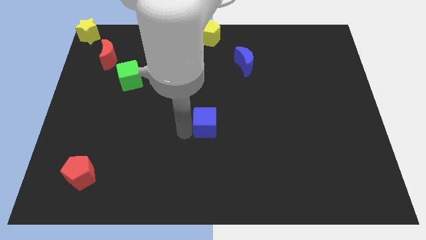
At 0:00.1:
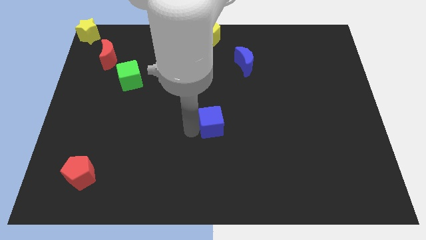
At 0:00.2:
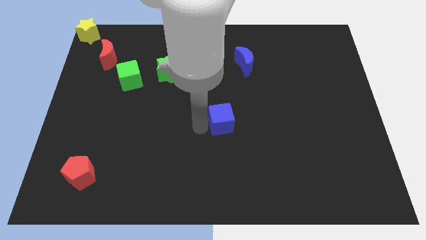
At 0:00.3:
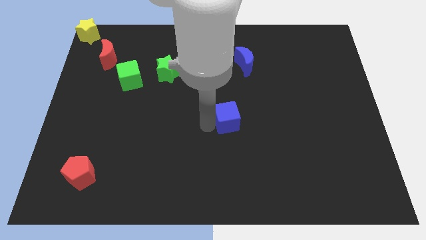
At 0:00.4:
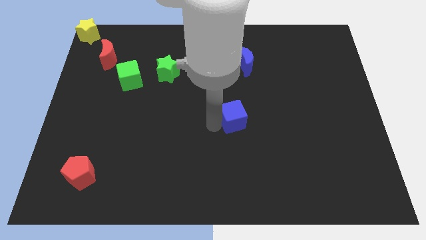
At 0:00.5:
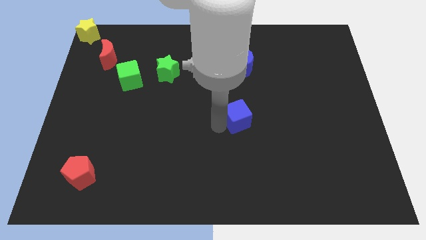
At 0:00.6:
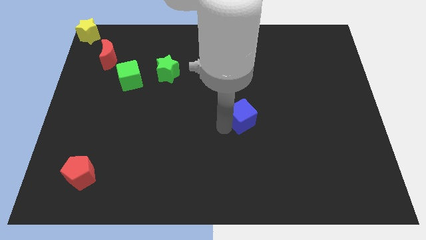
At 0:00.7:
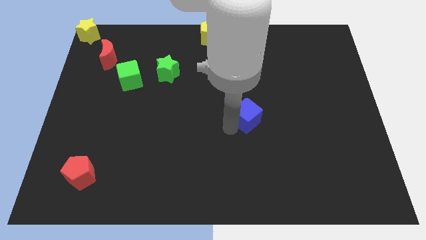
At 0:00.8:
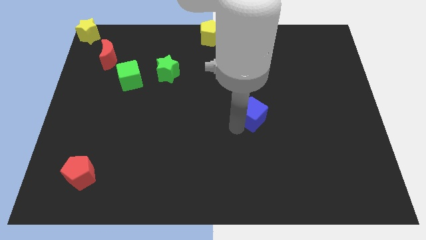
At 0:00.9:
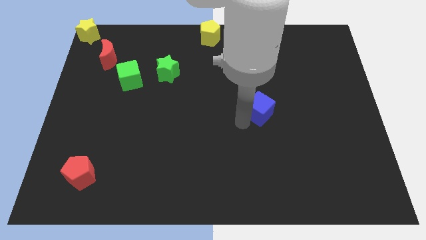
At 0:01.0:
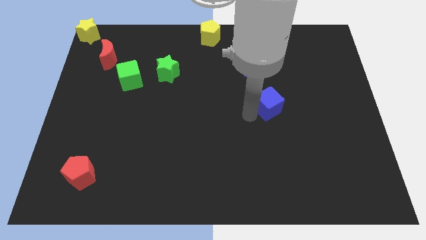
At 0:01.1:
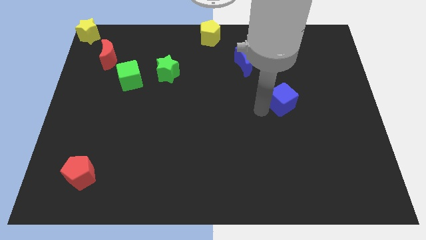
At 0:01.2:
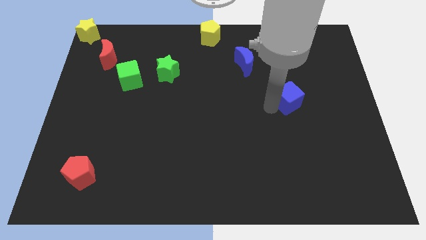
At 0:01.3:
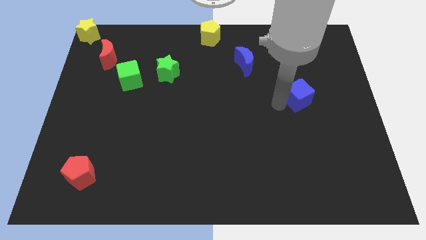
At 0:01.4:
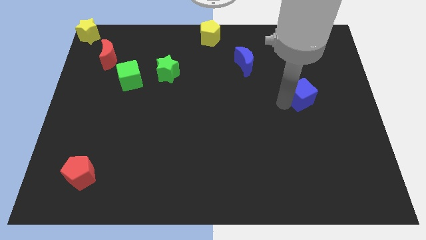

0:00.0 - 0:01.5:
push the blue cube towards the right side

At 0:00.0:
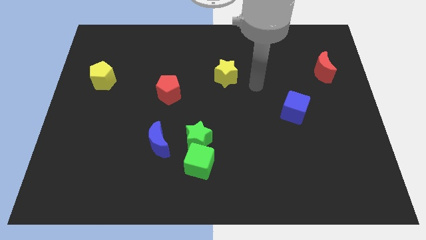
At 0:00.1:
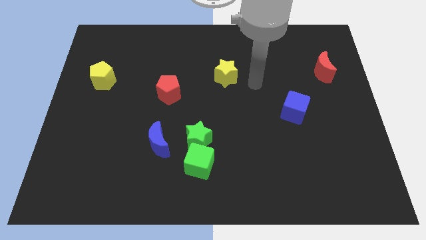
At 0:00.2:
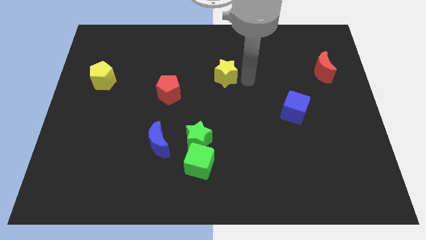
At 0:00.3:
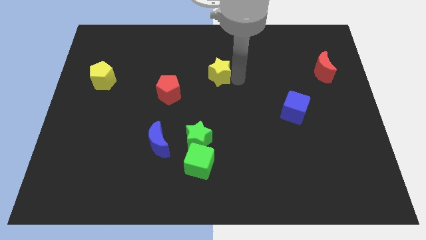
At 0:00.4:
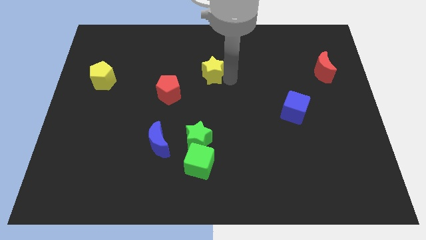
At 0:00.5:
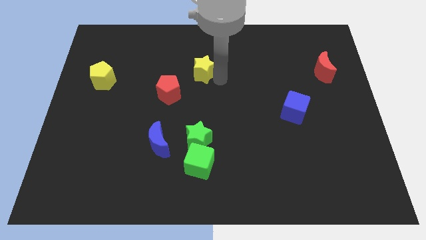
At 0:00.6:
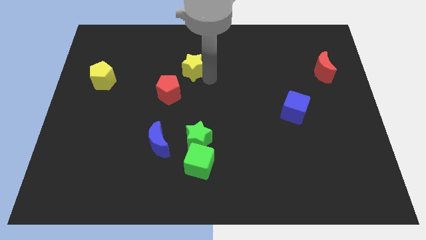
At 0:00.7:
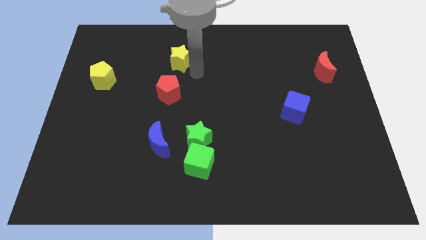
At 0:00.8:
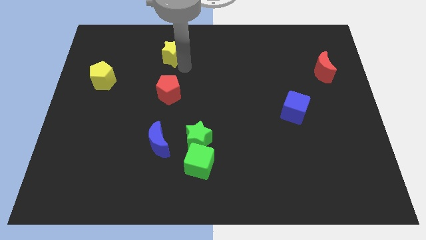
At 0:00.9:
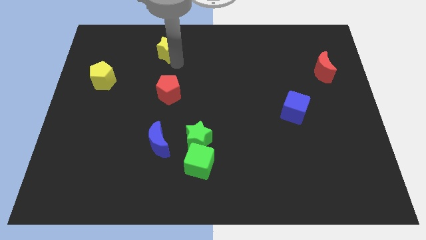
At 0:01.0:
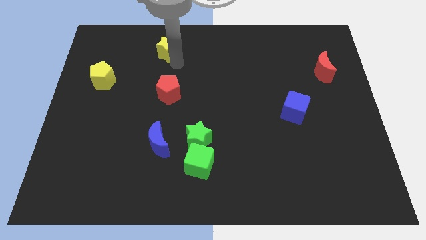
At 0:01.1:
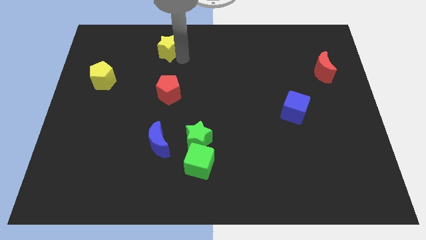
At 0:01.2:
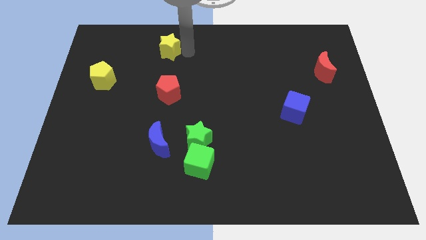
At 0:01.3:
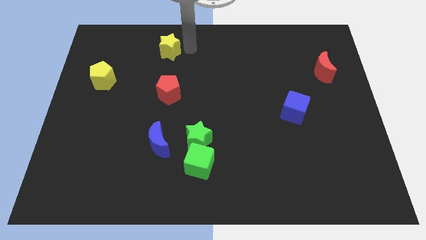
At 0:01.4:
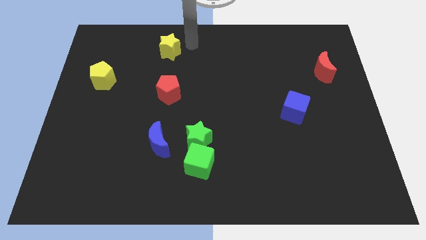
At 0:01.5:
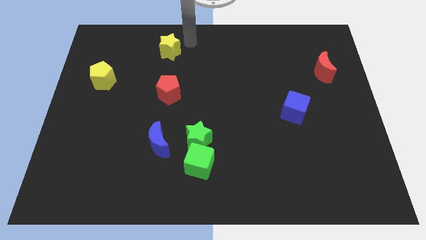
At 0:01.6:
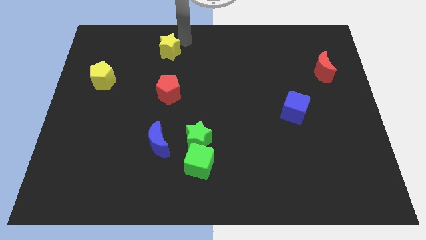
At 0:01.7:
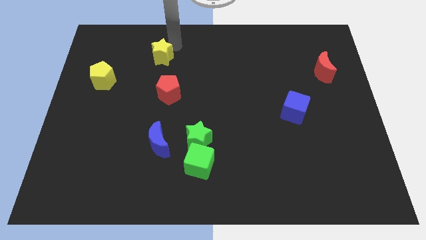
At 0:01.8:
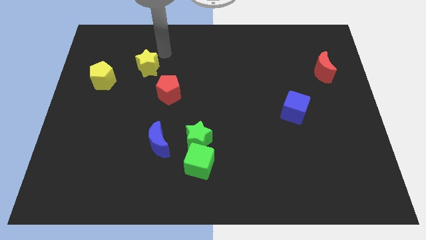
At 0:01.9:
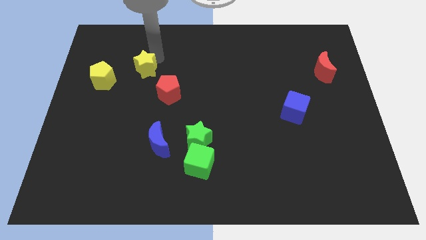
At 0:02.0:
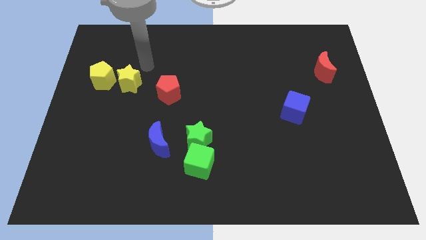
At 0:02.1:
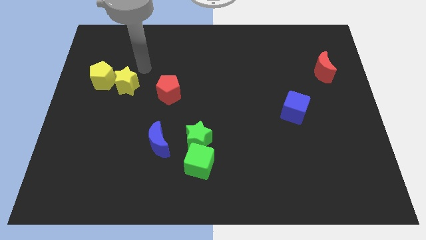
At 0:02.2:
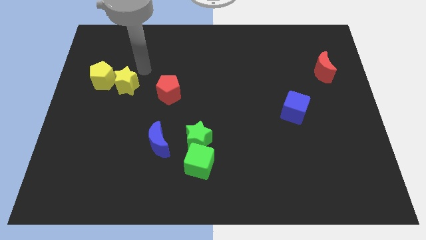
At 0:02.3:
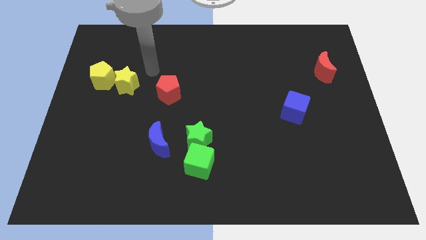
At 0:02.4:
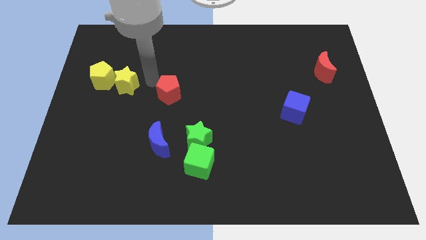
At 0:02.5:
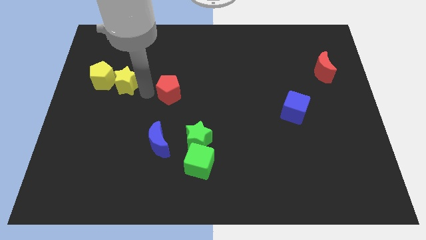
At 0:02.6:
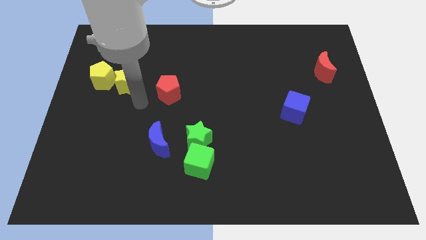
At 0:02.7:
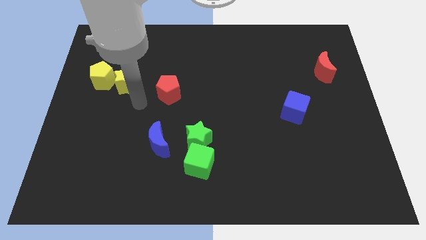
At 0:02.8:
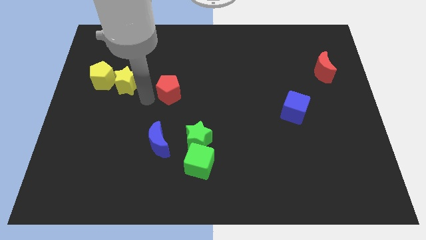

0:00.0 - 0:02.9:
move the yellow star close to the yellow pentagon

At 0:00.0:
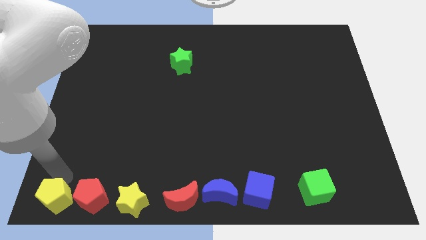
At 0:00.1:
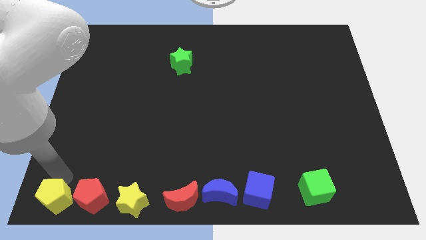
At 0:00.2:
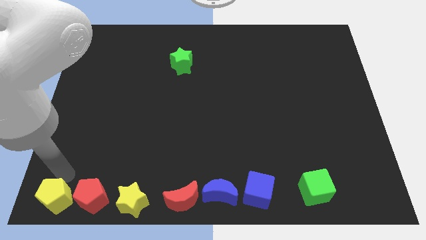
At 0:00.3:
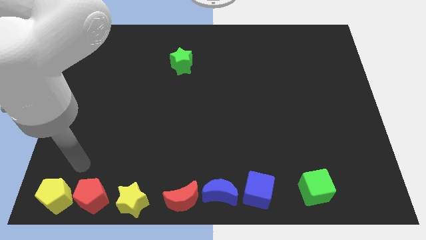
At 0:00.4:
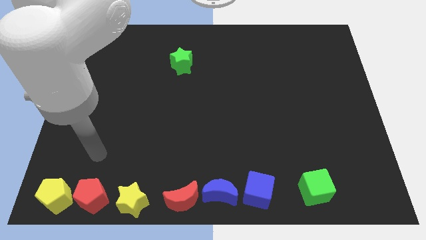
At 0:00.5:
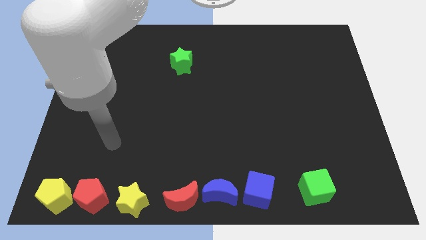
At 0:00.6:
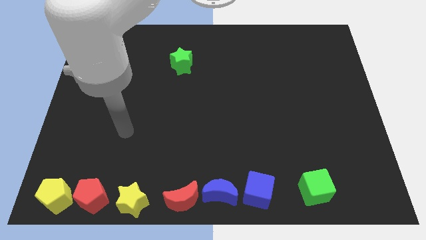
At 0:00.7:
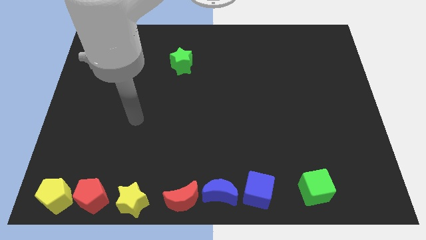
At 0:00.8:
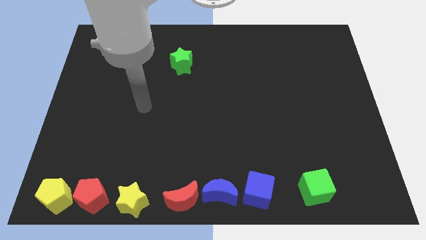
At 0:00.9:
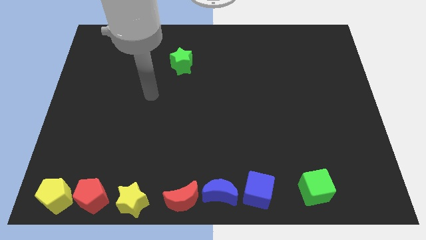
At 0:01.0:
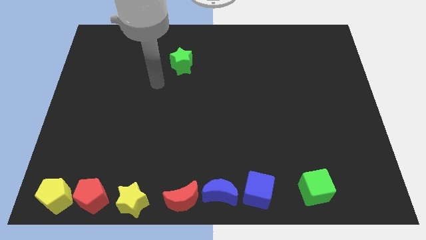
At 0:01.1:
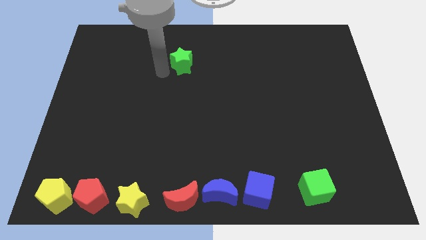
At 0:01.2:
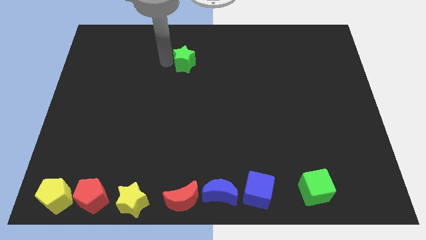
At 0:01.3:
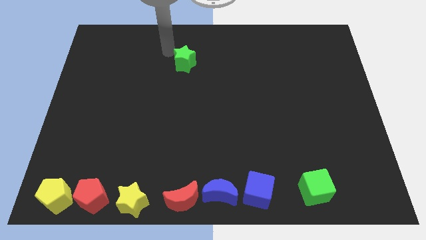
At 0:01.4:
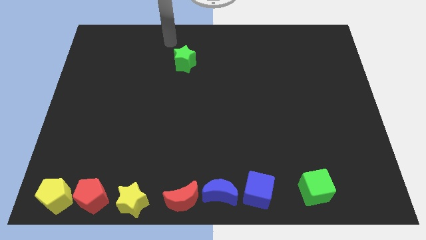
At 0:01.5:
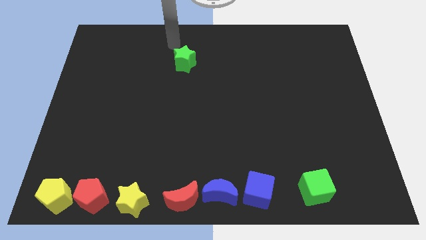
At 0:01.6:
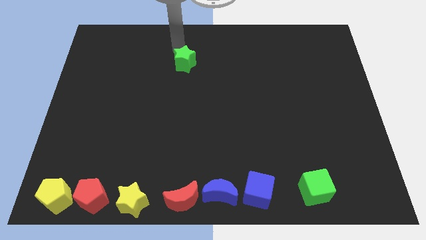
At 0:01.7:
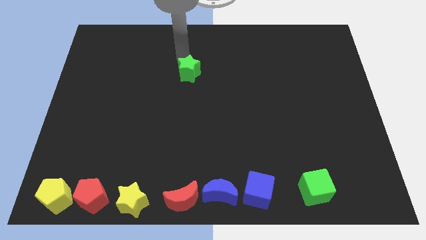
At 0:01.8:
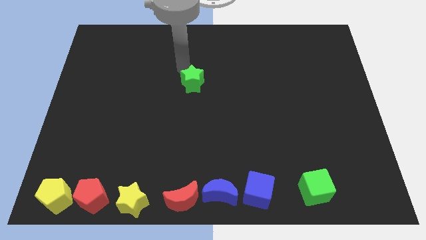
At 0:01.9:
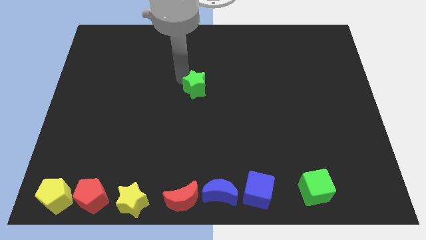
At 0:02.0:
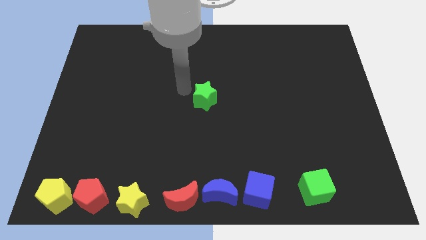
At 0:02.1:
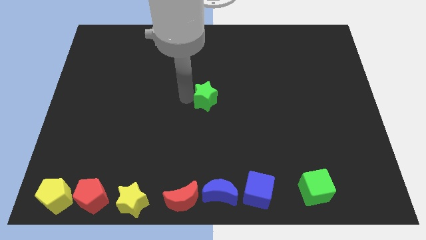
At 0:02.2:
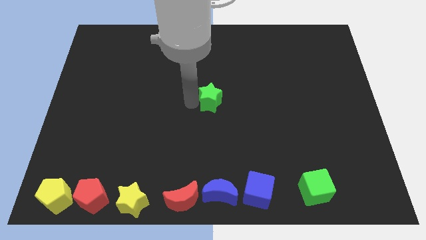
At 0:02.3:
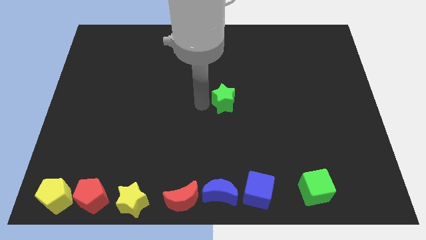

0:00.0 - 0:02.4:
place the green star at the center of the board

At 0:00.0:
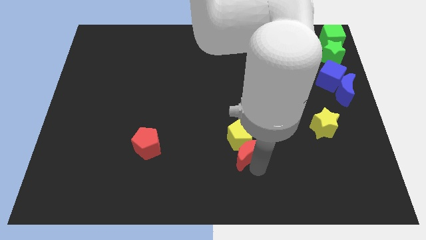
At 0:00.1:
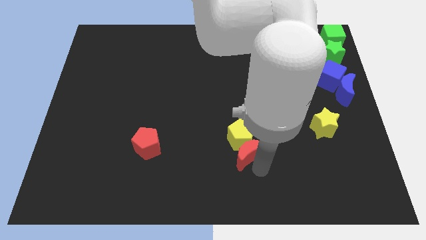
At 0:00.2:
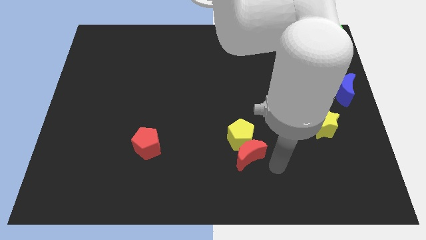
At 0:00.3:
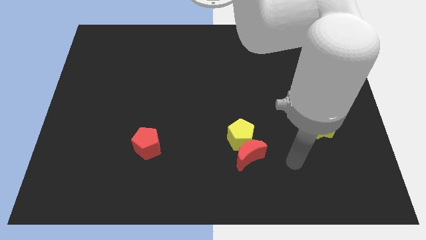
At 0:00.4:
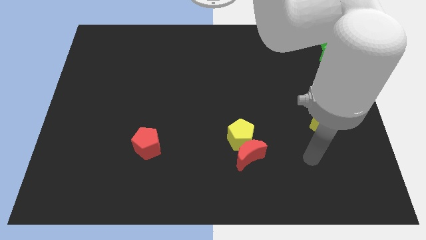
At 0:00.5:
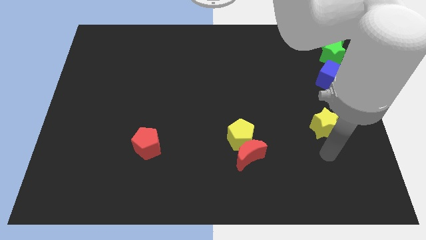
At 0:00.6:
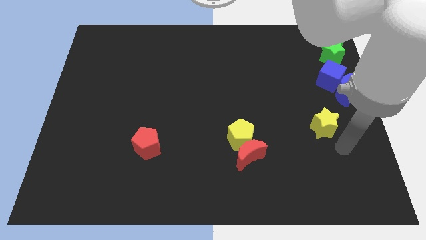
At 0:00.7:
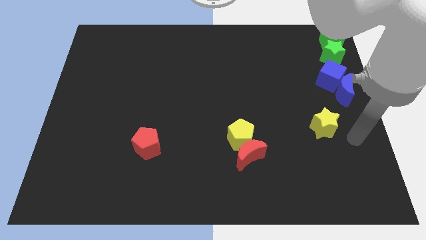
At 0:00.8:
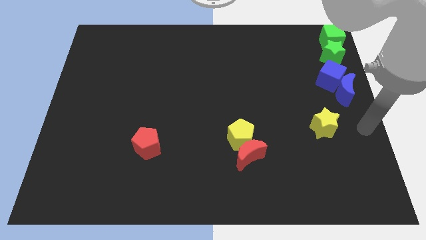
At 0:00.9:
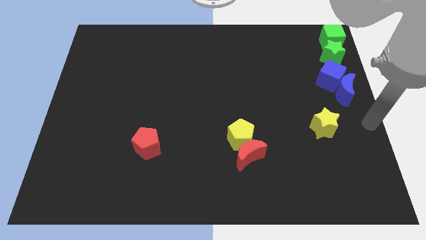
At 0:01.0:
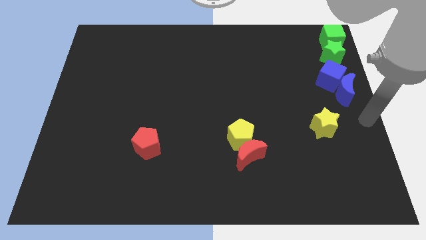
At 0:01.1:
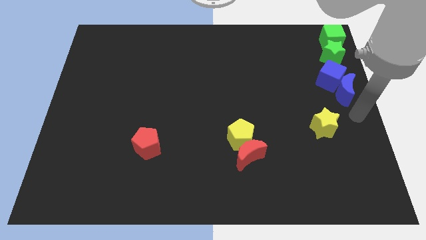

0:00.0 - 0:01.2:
move your arm to the right side of yellow star

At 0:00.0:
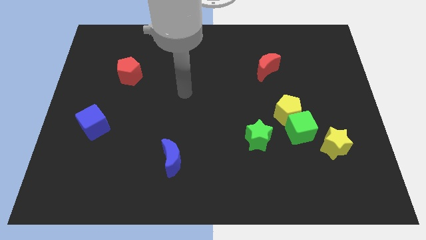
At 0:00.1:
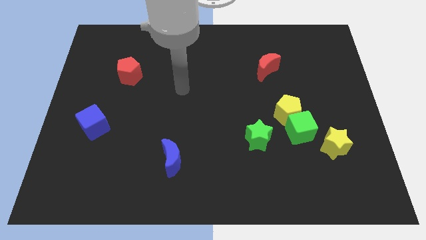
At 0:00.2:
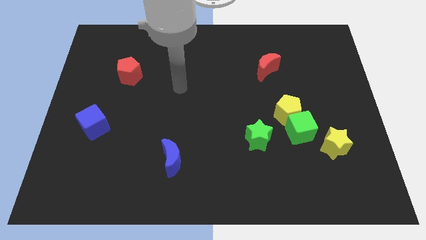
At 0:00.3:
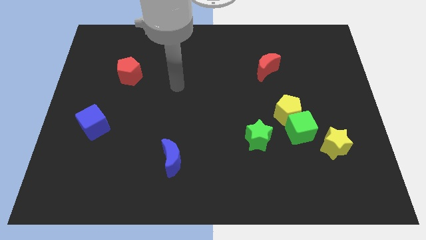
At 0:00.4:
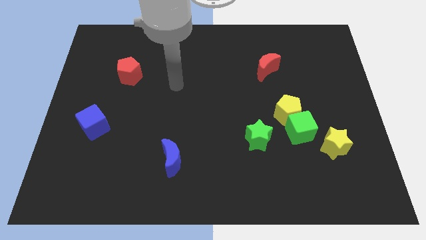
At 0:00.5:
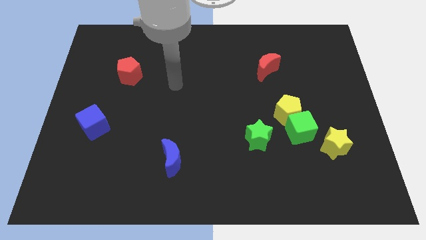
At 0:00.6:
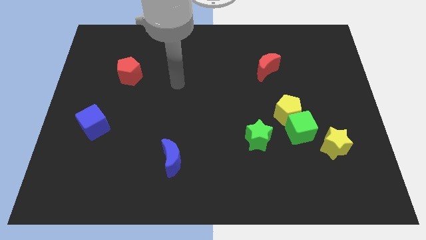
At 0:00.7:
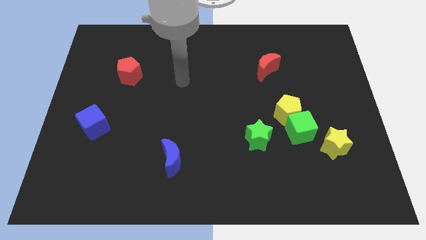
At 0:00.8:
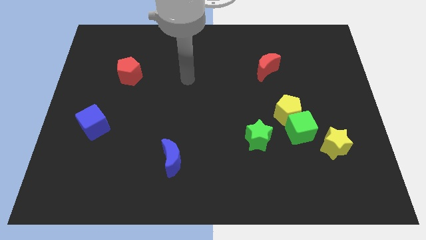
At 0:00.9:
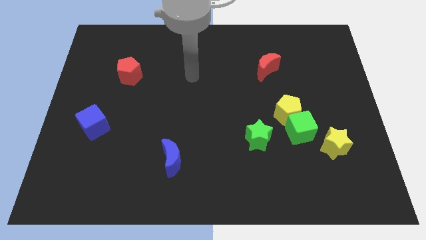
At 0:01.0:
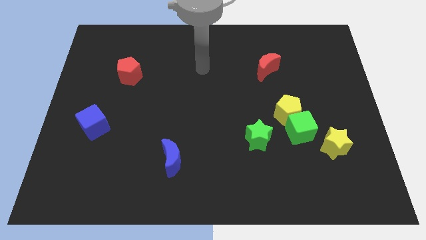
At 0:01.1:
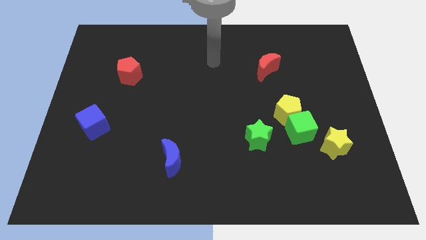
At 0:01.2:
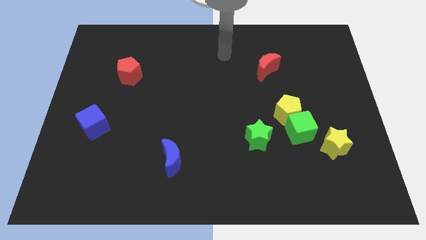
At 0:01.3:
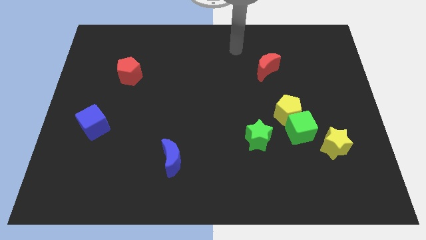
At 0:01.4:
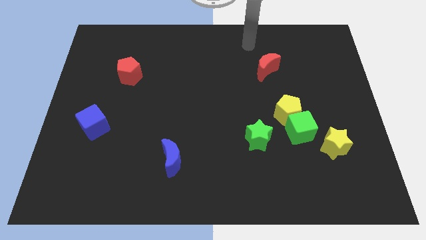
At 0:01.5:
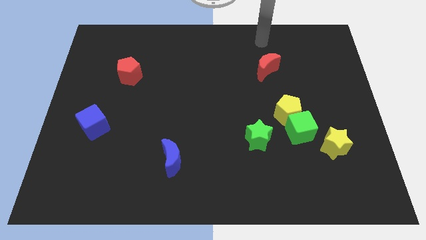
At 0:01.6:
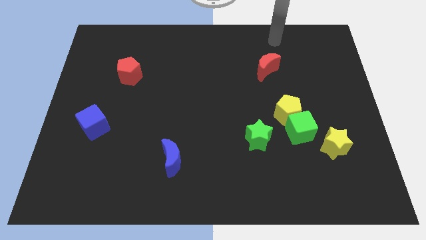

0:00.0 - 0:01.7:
point your hand above the red moon
